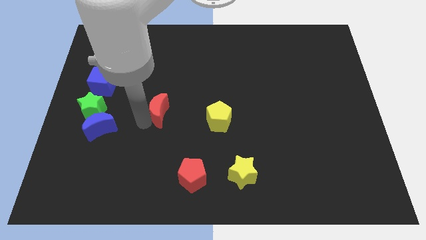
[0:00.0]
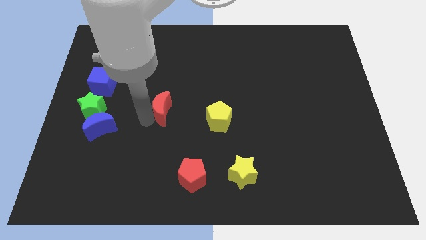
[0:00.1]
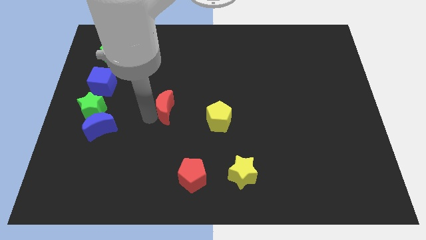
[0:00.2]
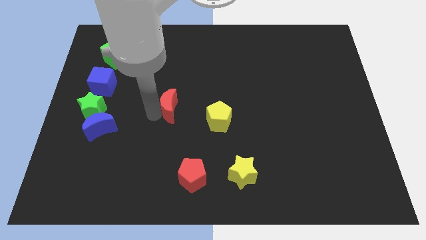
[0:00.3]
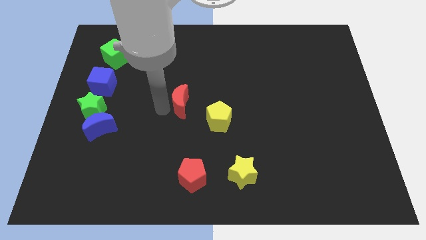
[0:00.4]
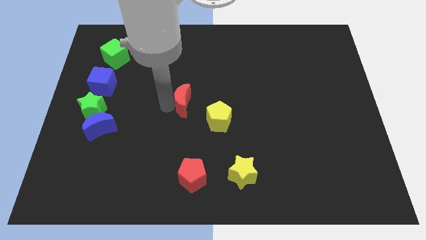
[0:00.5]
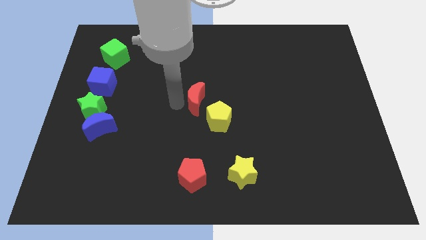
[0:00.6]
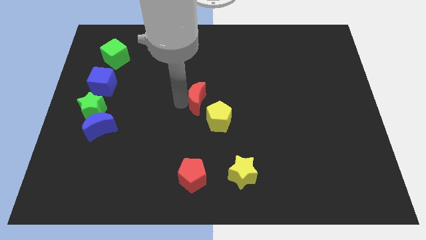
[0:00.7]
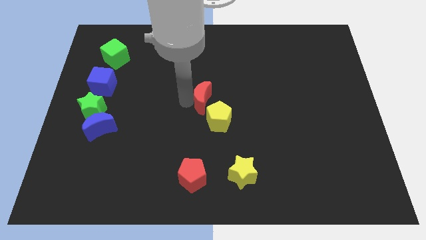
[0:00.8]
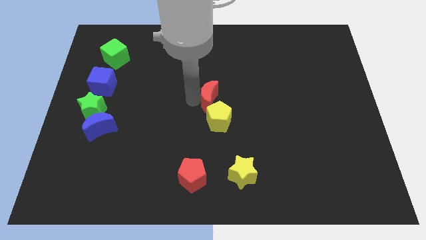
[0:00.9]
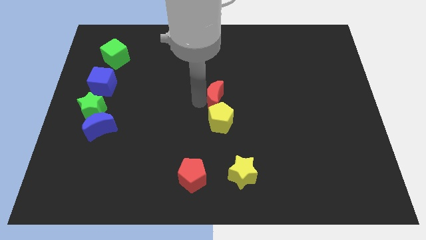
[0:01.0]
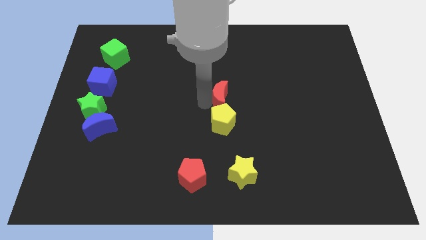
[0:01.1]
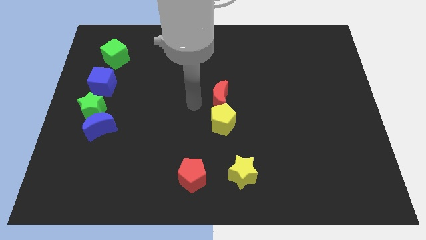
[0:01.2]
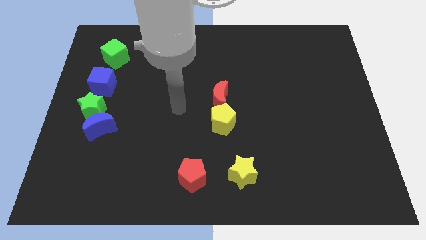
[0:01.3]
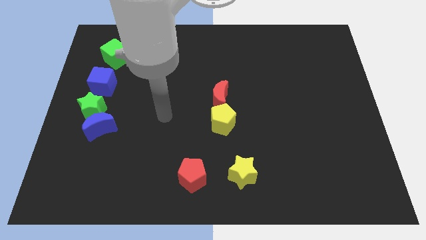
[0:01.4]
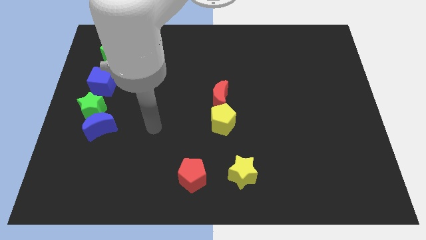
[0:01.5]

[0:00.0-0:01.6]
place the red moon at the top of the yellow pentagon

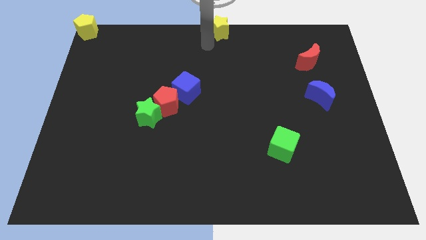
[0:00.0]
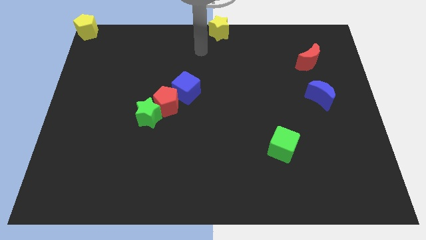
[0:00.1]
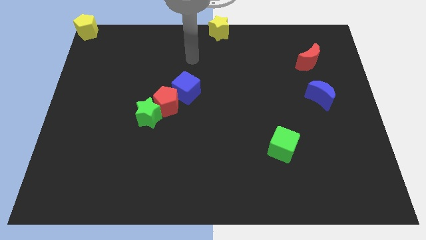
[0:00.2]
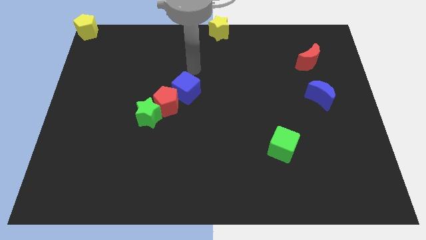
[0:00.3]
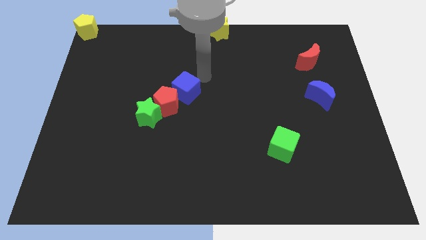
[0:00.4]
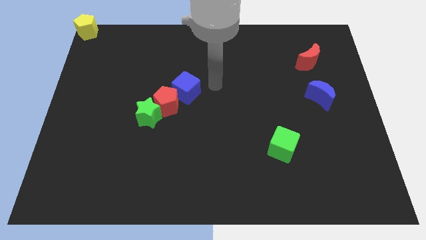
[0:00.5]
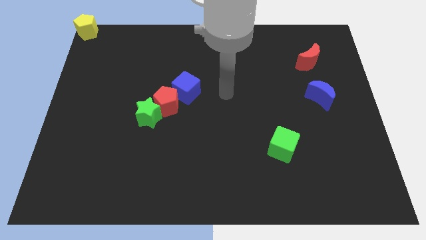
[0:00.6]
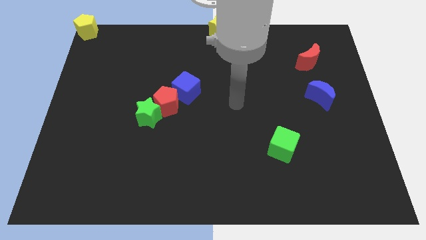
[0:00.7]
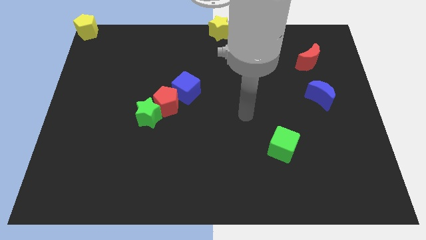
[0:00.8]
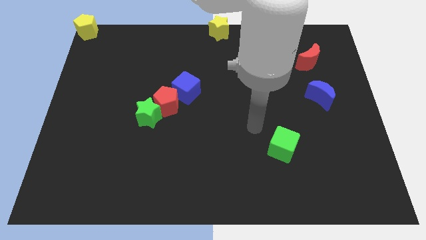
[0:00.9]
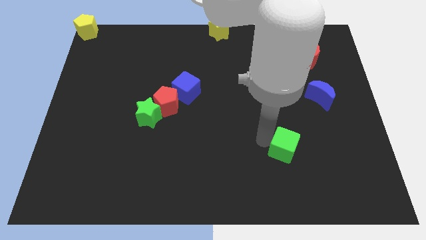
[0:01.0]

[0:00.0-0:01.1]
move arm near green cube

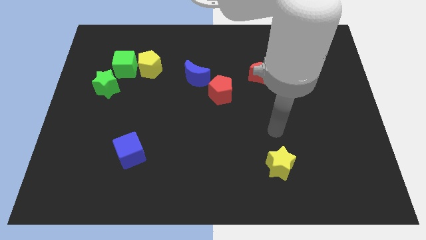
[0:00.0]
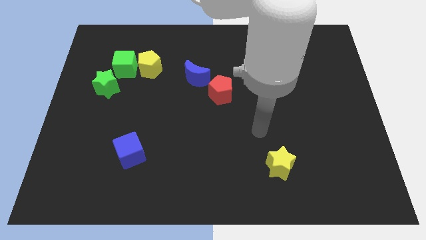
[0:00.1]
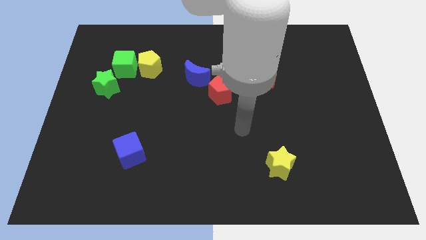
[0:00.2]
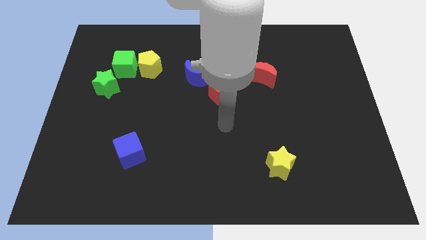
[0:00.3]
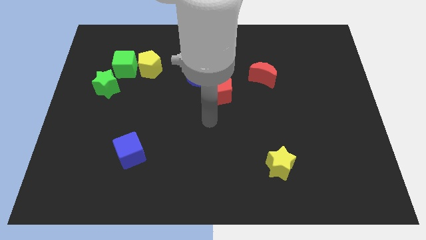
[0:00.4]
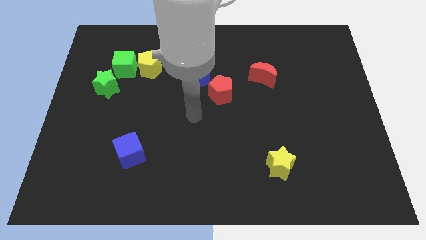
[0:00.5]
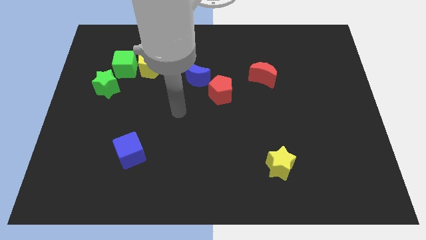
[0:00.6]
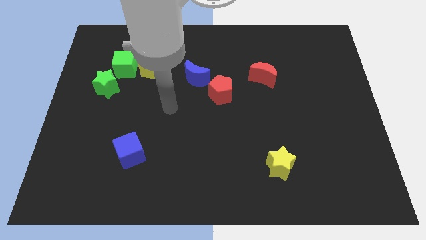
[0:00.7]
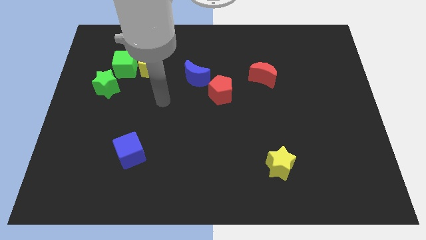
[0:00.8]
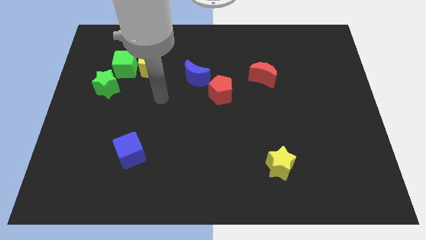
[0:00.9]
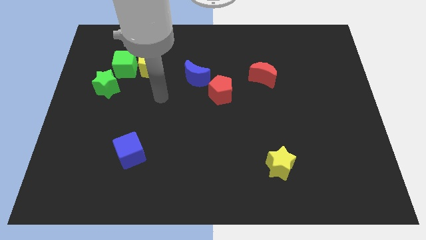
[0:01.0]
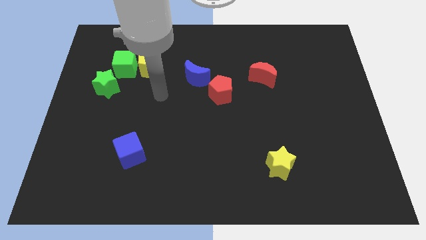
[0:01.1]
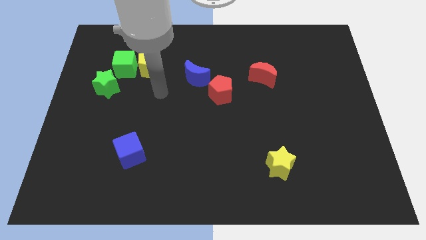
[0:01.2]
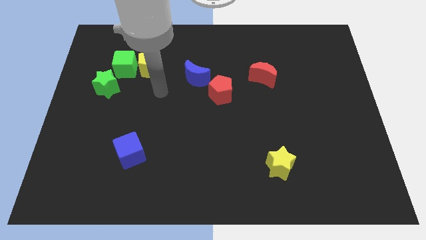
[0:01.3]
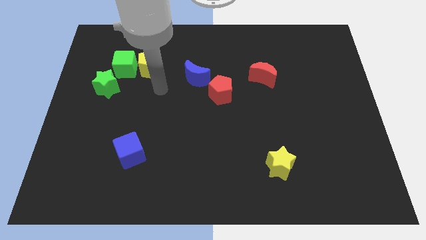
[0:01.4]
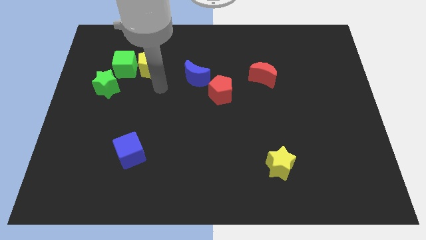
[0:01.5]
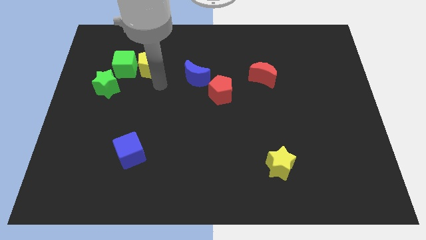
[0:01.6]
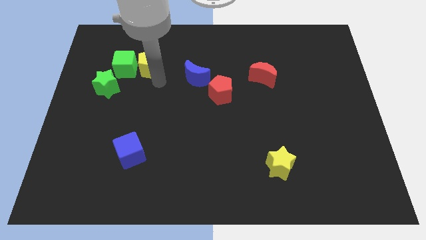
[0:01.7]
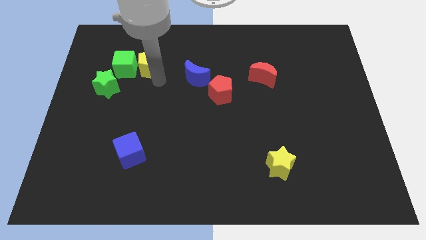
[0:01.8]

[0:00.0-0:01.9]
touch the bottom of the yellow pentagon

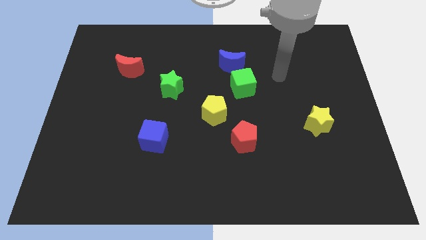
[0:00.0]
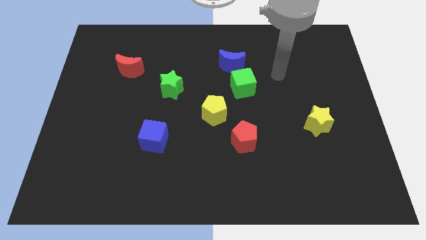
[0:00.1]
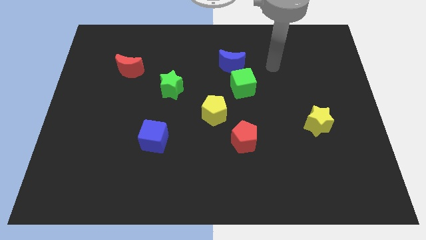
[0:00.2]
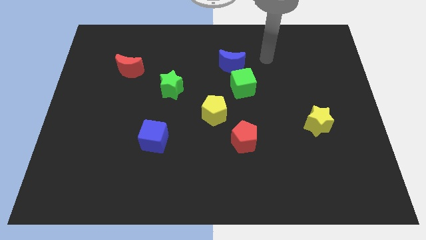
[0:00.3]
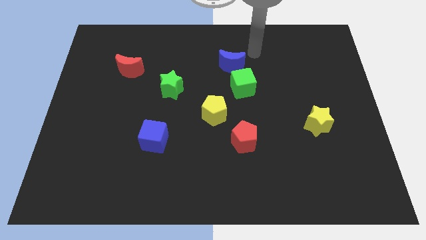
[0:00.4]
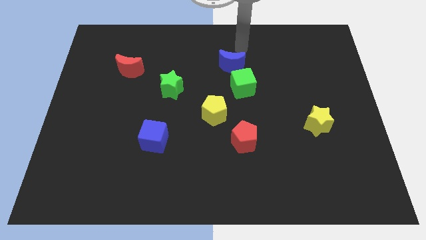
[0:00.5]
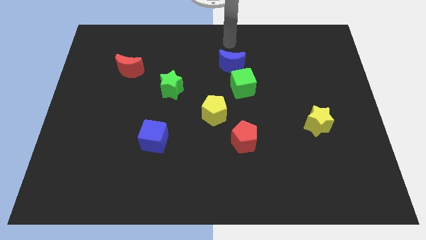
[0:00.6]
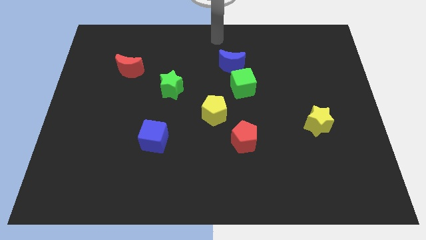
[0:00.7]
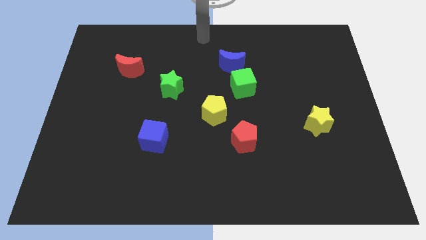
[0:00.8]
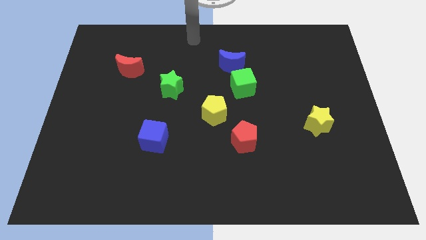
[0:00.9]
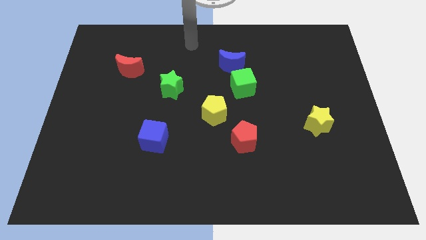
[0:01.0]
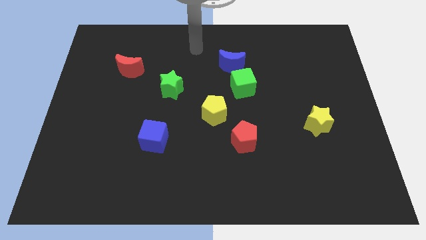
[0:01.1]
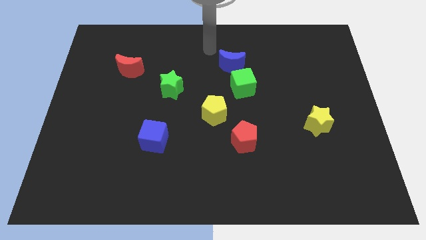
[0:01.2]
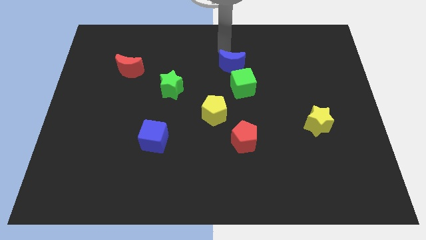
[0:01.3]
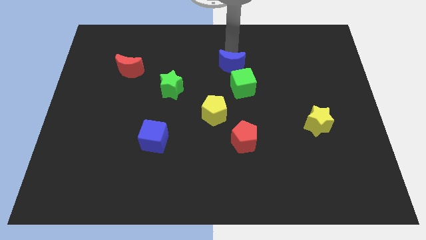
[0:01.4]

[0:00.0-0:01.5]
point your arm at the top side of the blue crescent

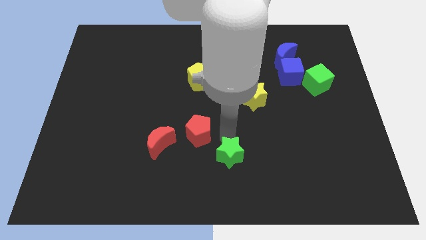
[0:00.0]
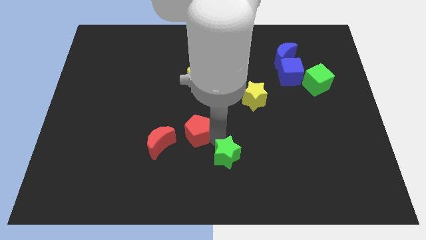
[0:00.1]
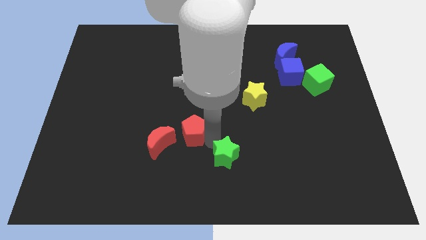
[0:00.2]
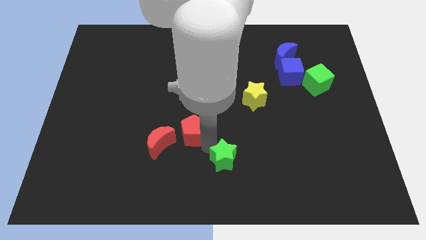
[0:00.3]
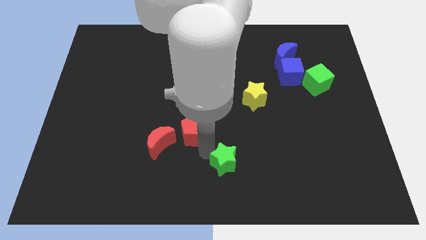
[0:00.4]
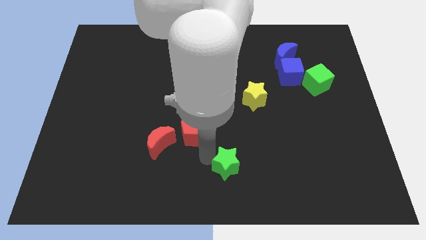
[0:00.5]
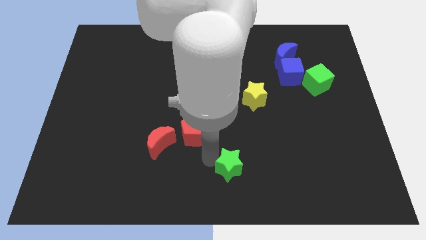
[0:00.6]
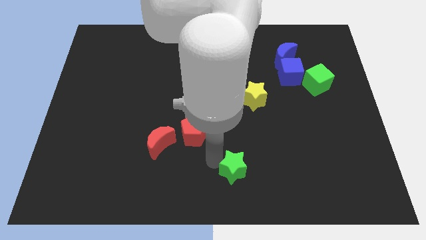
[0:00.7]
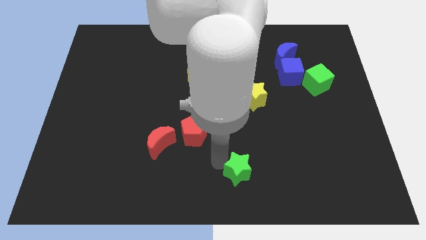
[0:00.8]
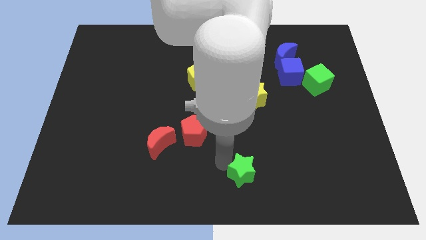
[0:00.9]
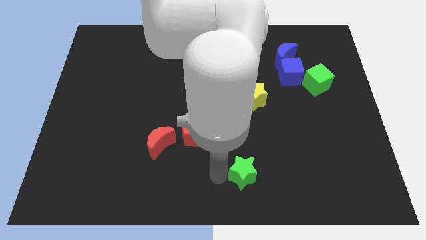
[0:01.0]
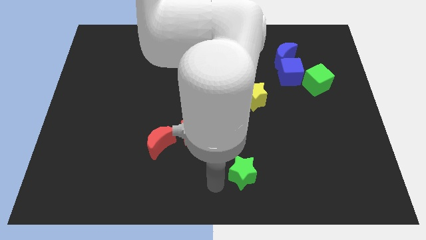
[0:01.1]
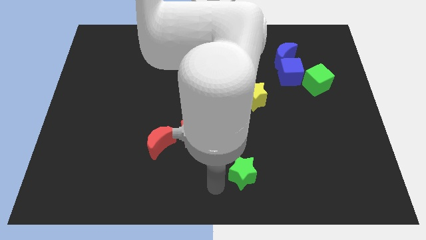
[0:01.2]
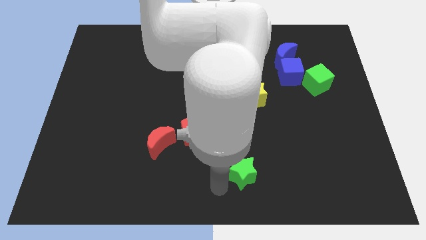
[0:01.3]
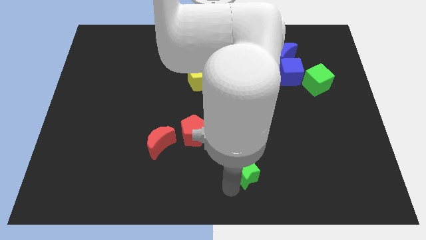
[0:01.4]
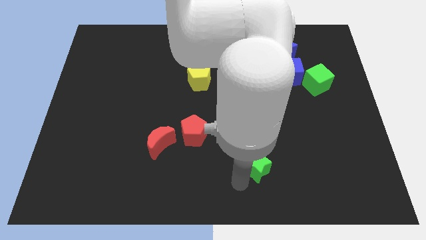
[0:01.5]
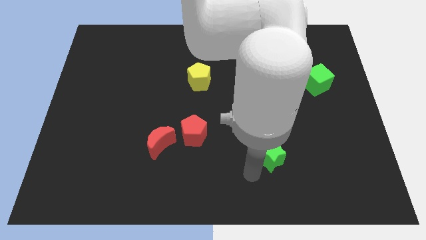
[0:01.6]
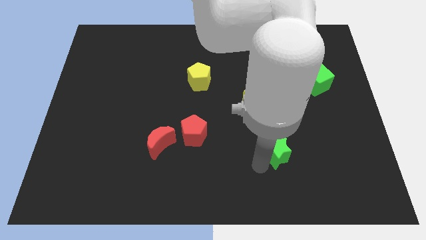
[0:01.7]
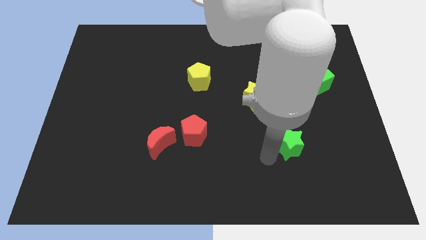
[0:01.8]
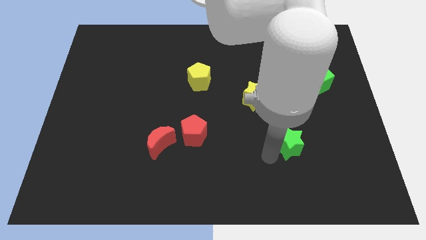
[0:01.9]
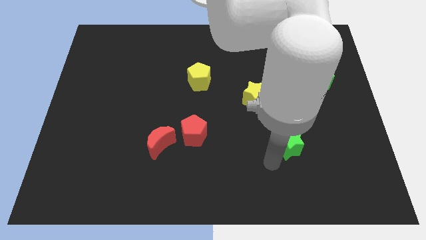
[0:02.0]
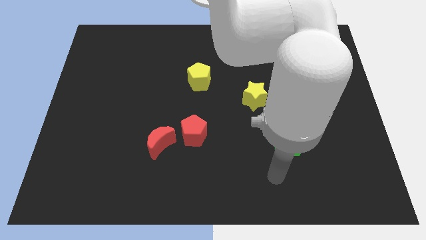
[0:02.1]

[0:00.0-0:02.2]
push the green star diagonally on the right side

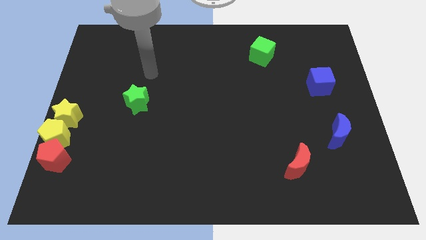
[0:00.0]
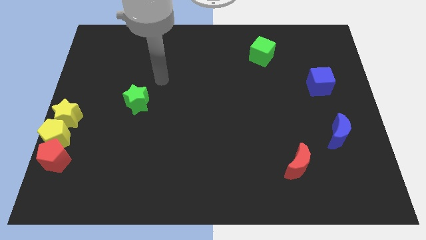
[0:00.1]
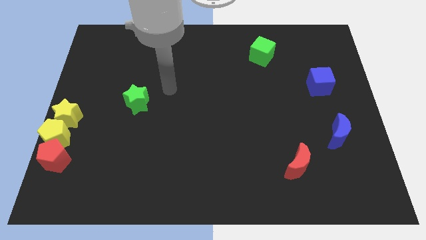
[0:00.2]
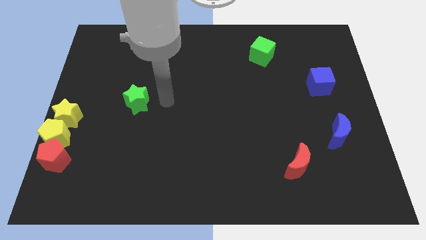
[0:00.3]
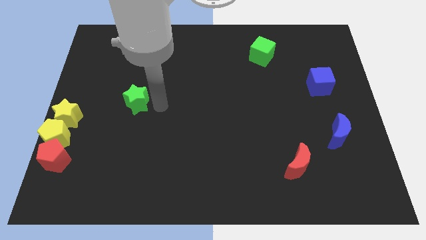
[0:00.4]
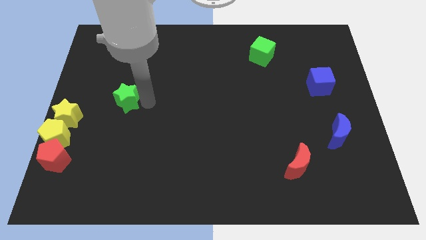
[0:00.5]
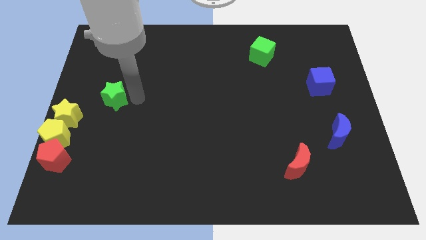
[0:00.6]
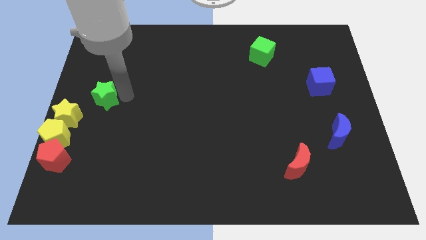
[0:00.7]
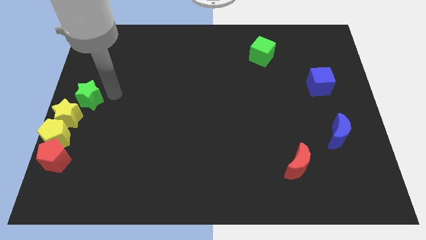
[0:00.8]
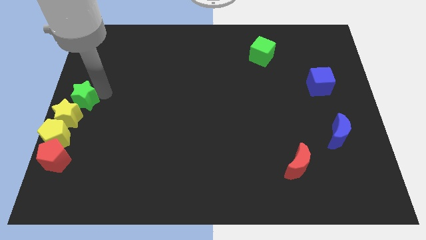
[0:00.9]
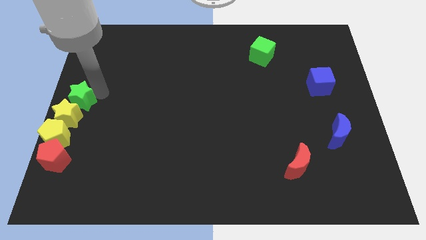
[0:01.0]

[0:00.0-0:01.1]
move green star right above the yellow star
